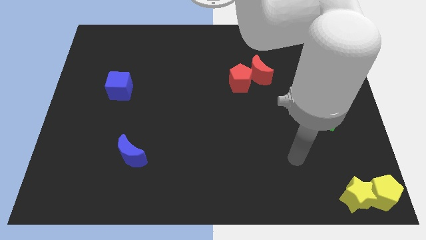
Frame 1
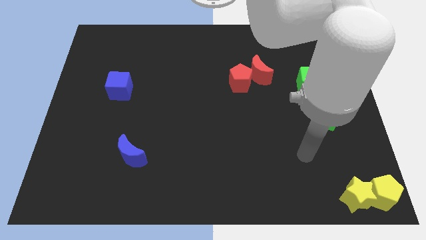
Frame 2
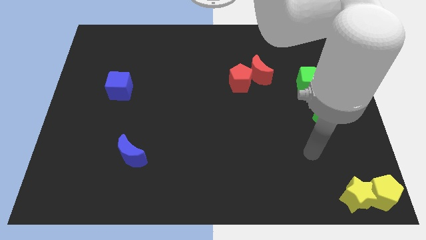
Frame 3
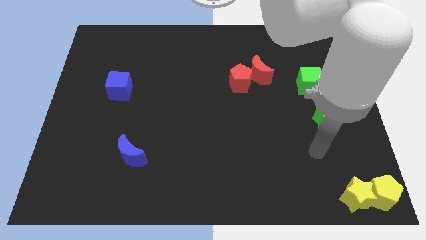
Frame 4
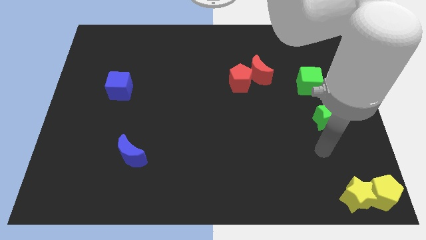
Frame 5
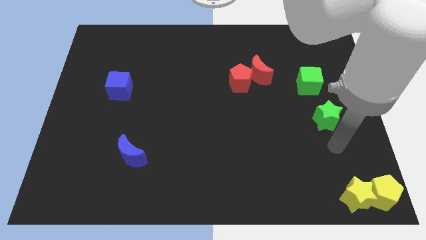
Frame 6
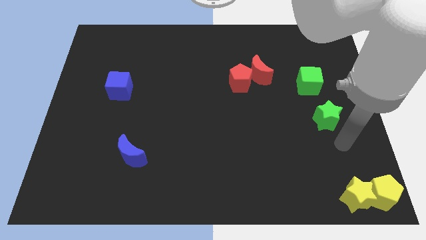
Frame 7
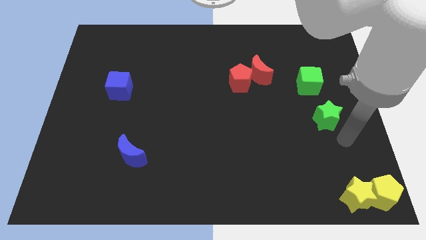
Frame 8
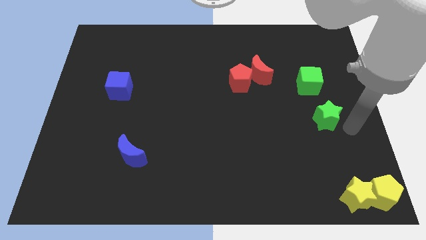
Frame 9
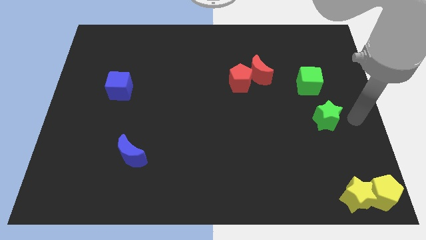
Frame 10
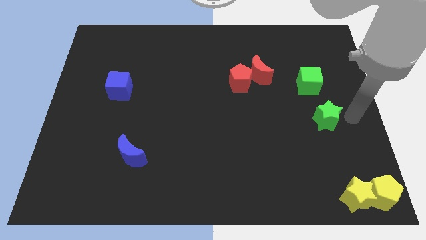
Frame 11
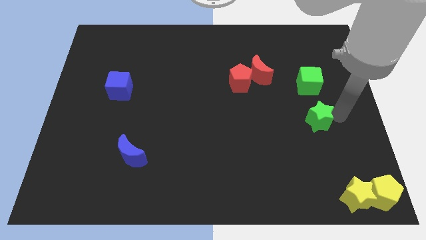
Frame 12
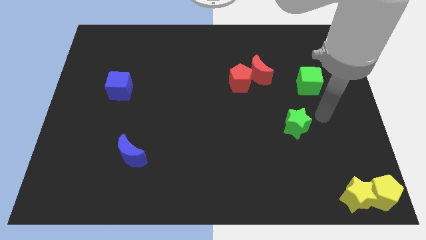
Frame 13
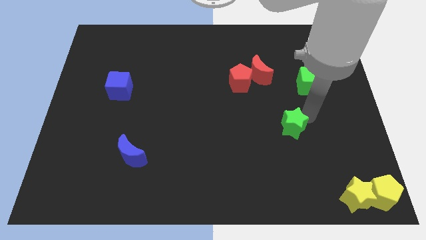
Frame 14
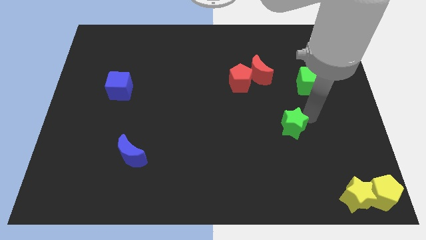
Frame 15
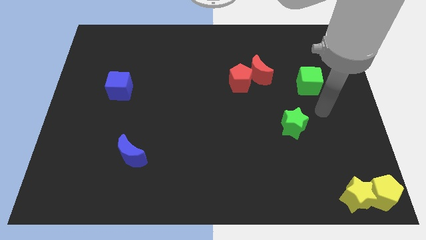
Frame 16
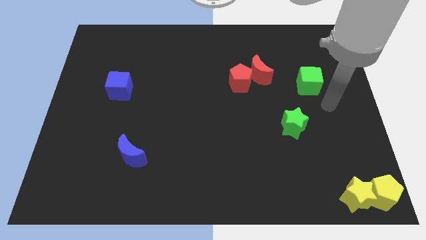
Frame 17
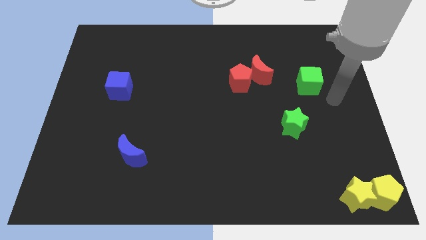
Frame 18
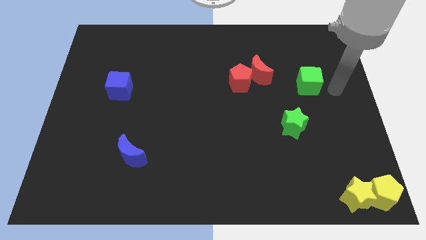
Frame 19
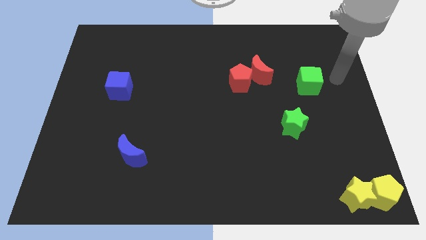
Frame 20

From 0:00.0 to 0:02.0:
push the green star diagonal to the red pentagon

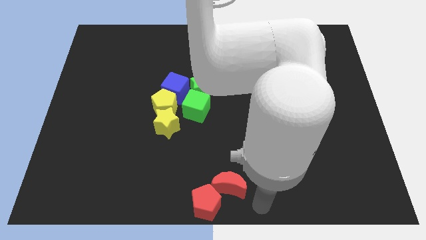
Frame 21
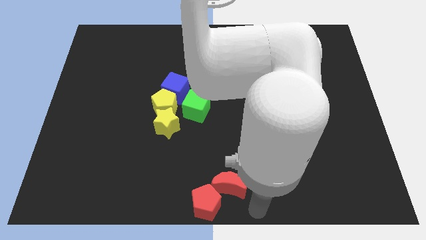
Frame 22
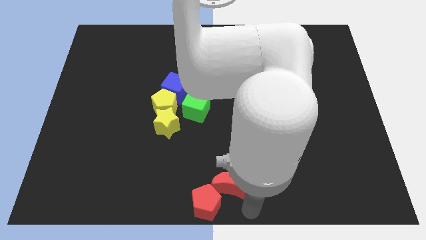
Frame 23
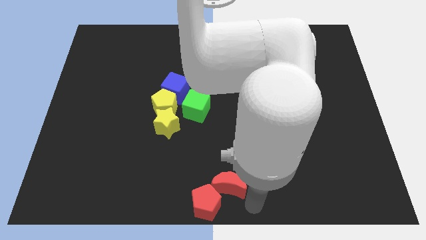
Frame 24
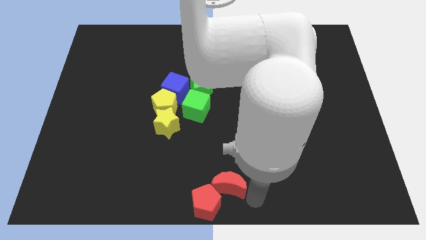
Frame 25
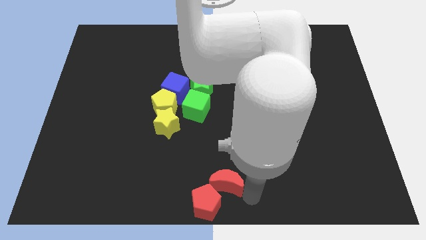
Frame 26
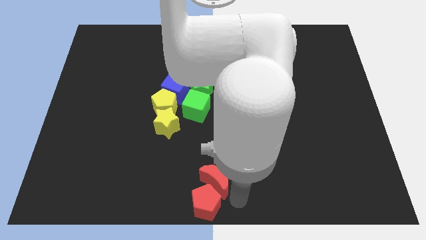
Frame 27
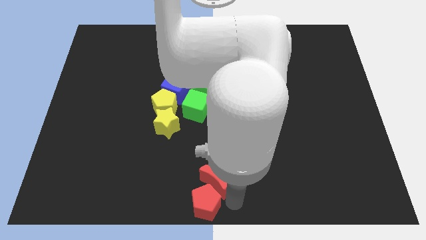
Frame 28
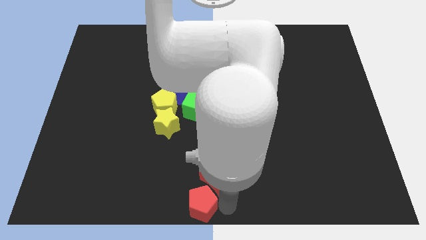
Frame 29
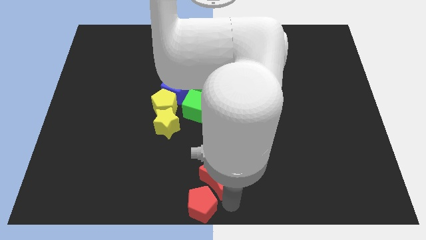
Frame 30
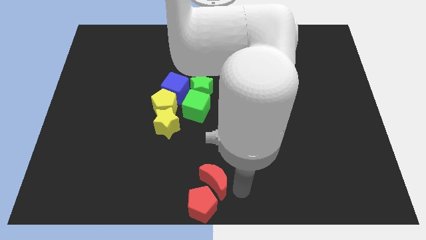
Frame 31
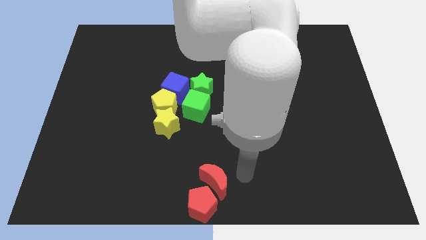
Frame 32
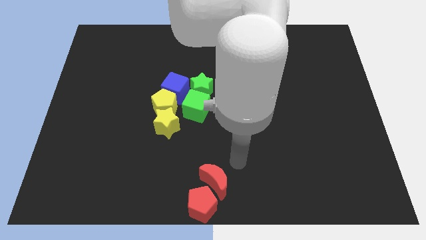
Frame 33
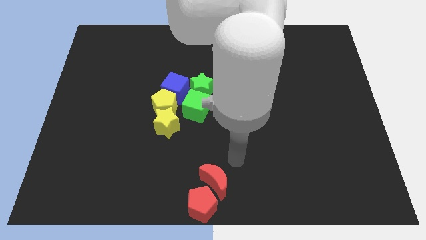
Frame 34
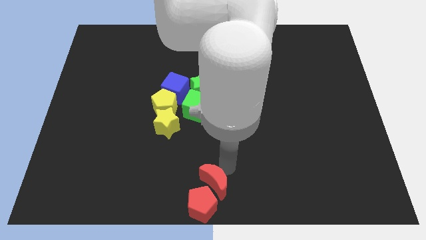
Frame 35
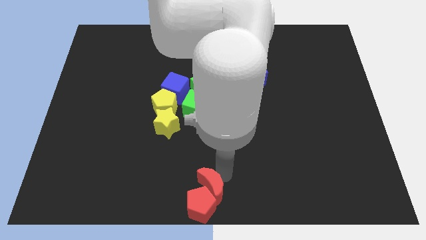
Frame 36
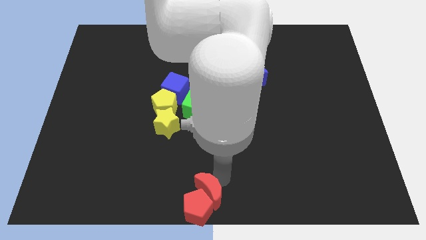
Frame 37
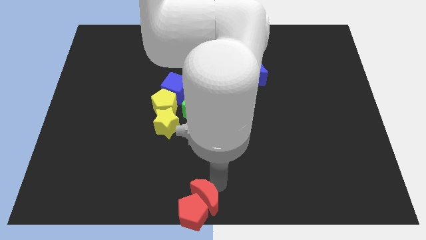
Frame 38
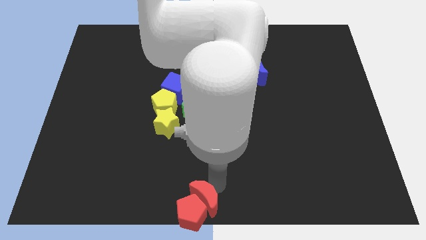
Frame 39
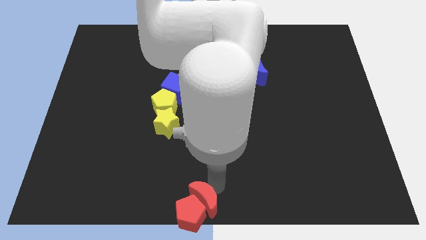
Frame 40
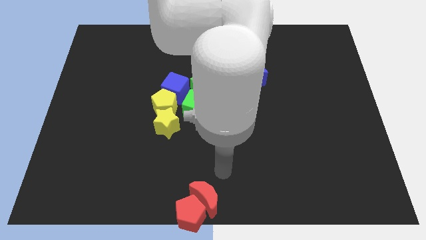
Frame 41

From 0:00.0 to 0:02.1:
place red blocks to the bottom center

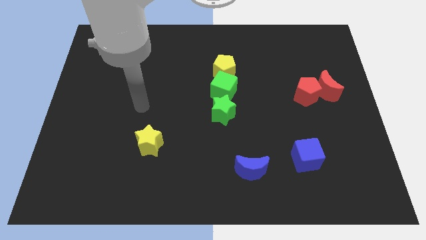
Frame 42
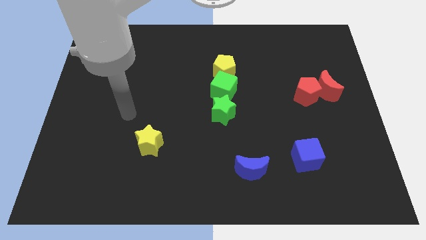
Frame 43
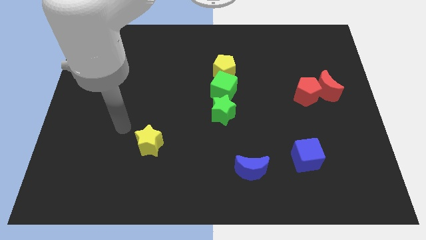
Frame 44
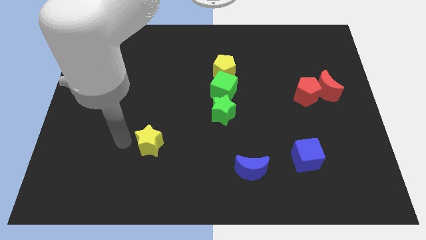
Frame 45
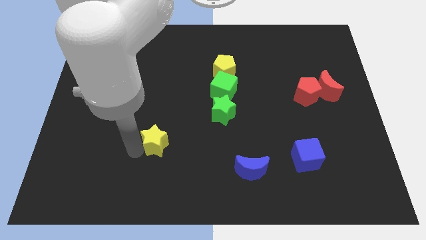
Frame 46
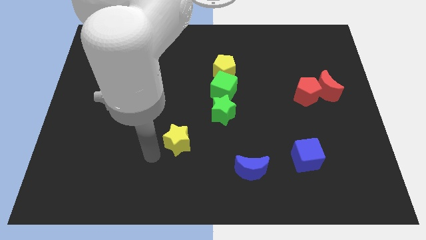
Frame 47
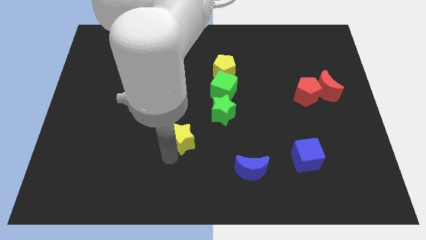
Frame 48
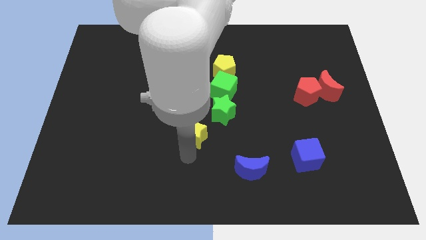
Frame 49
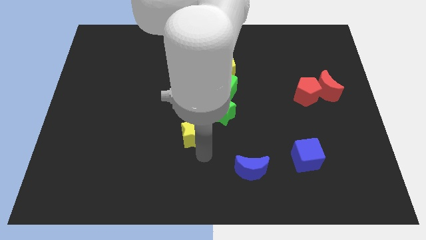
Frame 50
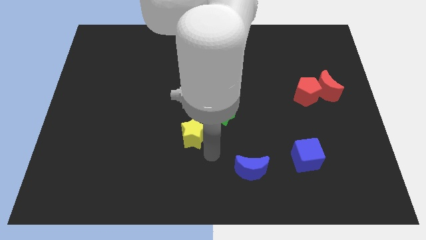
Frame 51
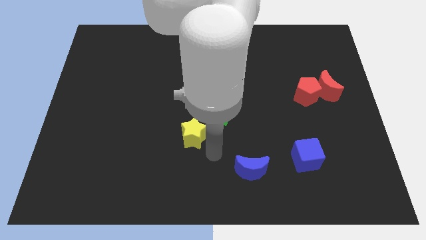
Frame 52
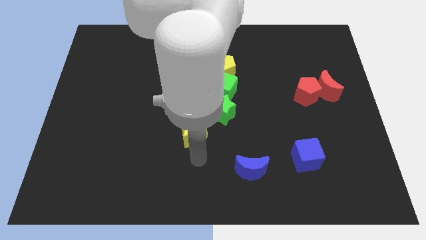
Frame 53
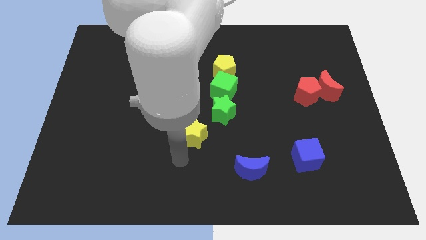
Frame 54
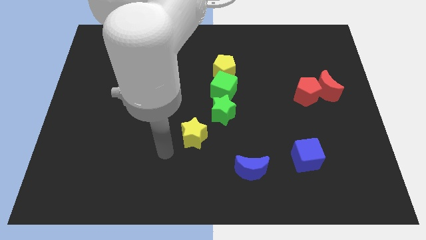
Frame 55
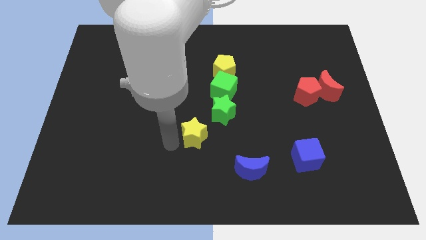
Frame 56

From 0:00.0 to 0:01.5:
move the yellow star towards right

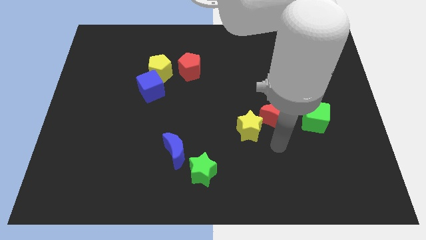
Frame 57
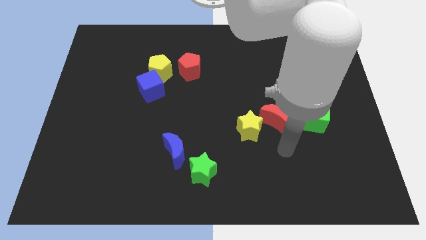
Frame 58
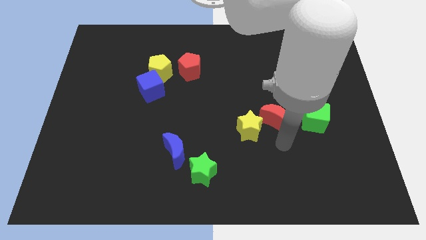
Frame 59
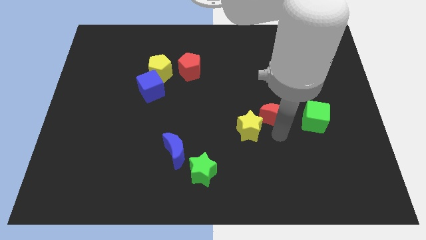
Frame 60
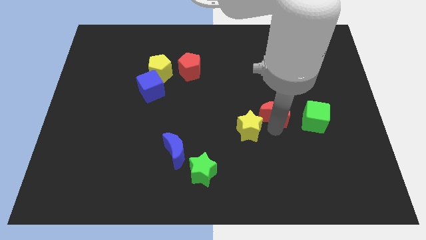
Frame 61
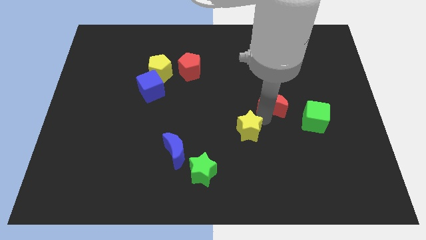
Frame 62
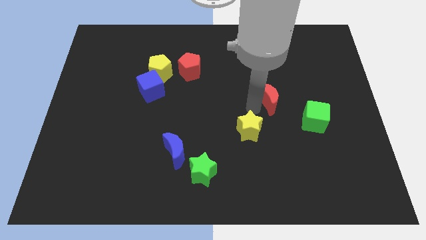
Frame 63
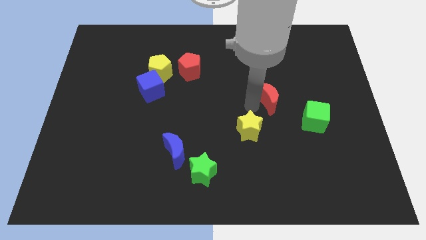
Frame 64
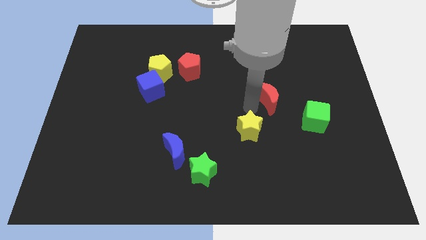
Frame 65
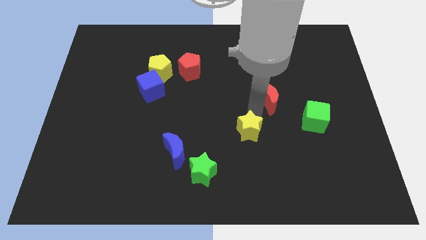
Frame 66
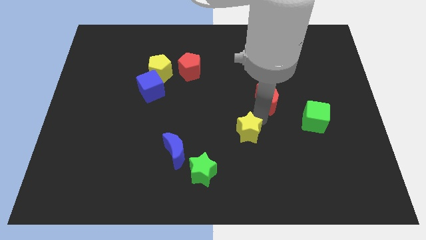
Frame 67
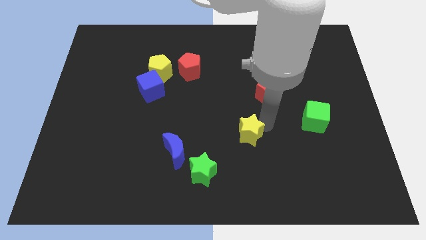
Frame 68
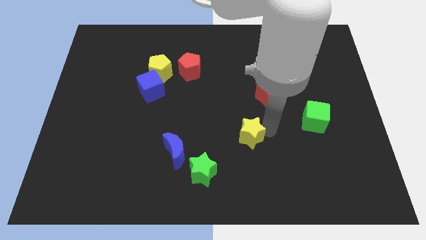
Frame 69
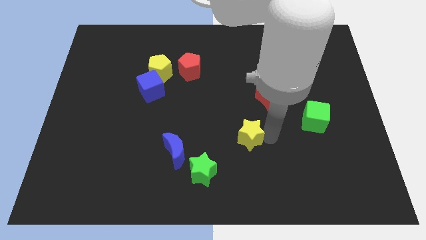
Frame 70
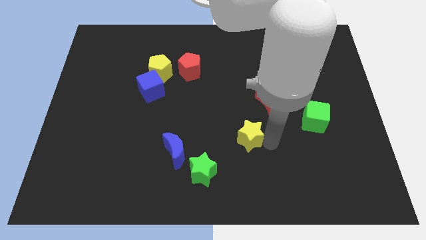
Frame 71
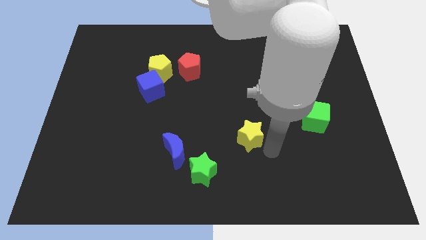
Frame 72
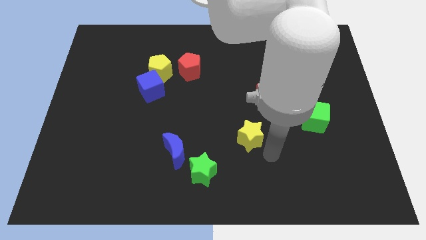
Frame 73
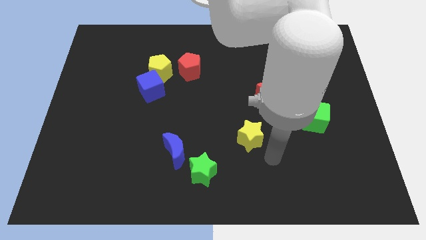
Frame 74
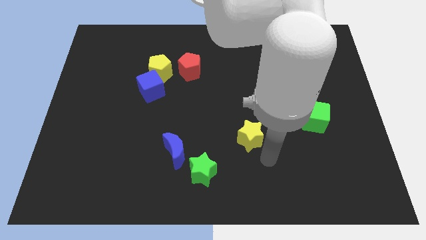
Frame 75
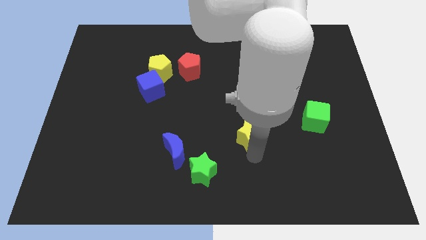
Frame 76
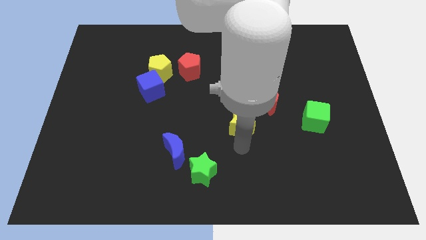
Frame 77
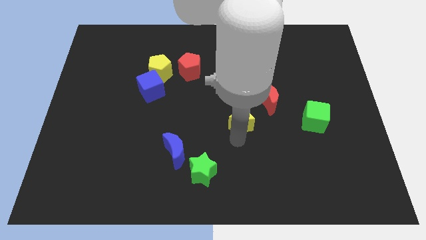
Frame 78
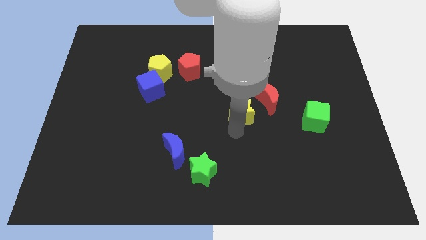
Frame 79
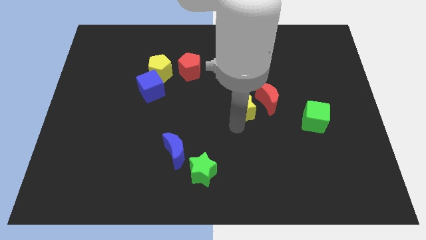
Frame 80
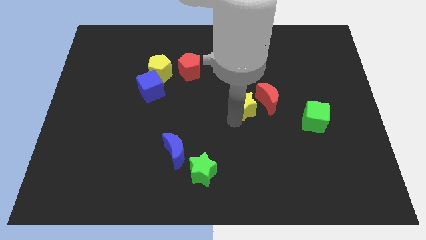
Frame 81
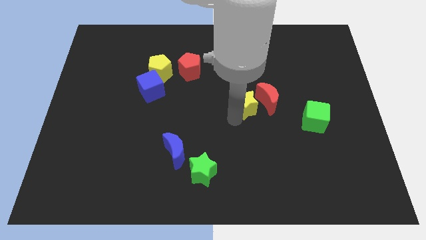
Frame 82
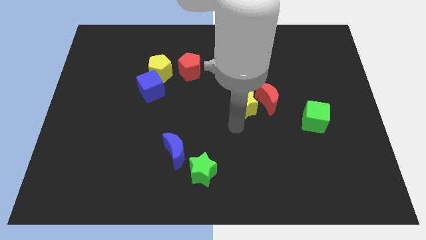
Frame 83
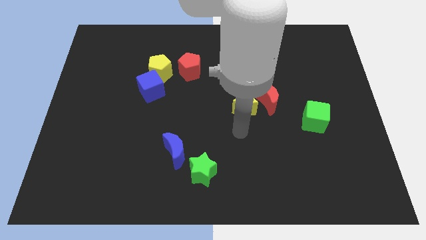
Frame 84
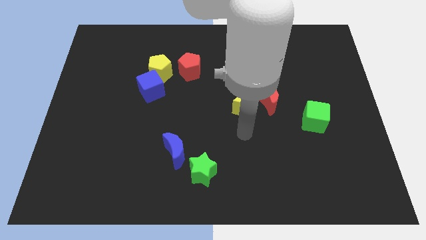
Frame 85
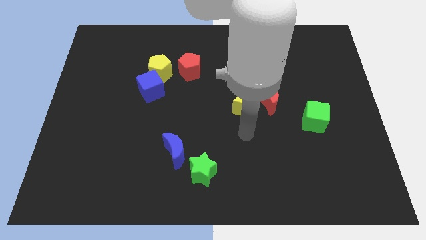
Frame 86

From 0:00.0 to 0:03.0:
move the yellow star to the center of the board

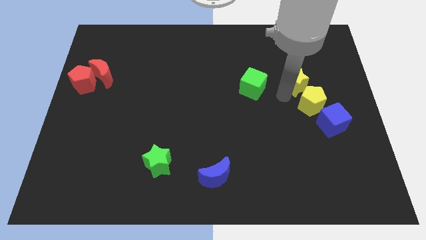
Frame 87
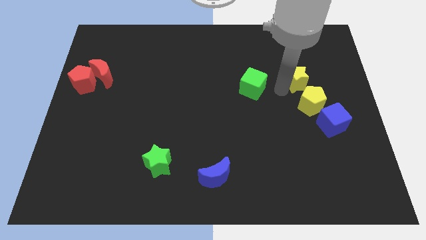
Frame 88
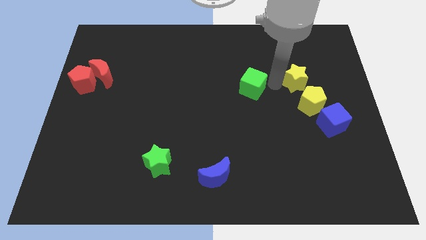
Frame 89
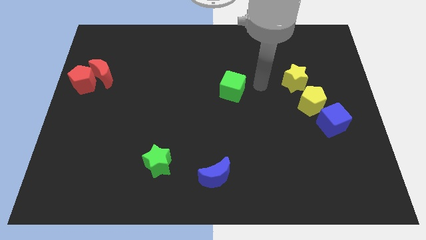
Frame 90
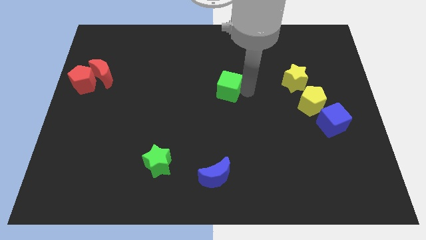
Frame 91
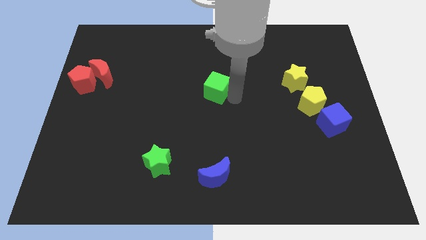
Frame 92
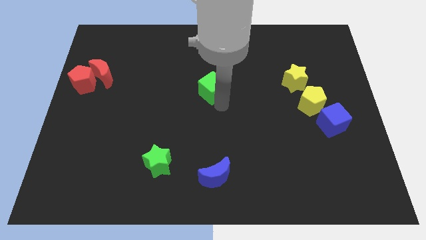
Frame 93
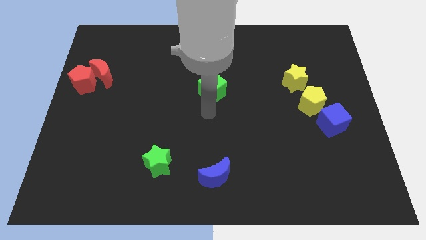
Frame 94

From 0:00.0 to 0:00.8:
push the green cube to the left
